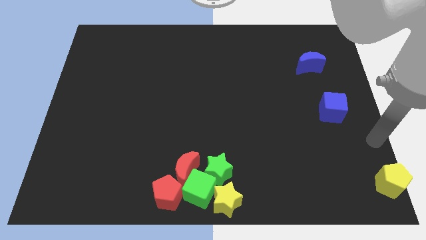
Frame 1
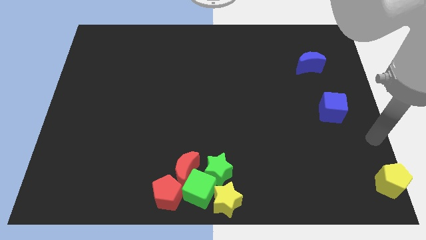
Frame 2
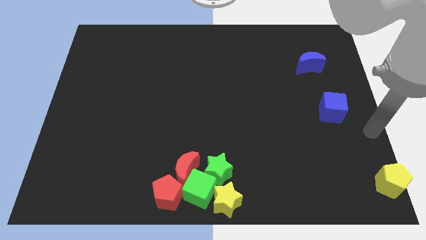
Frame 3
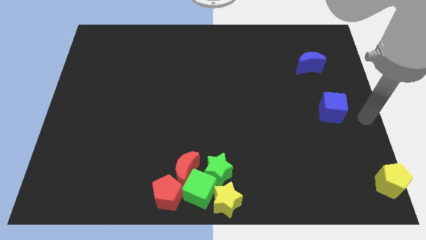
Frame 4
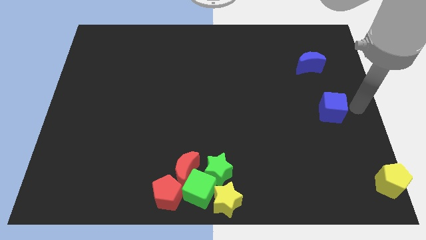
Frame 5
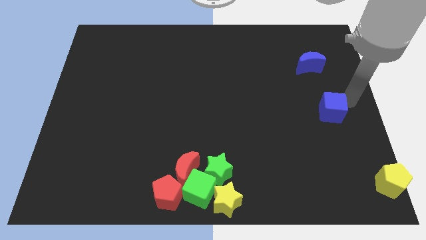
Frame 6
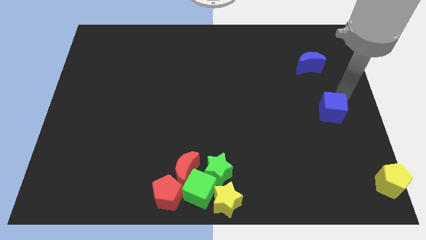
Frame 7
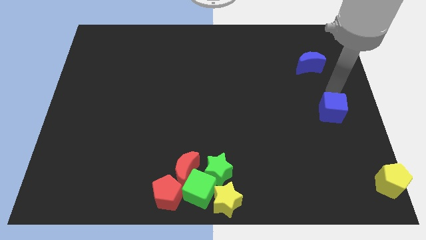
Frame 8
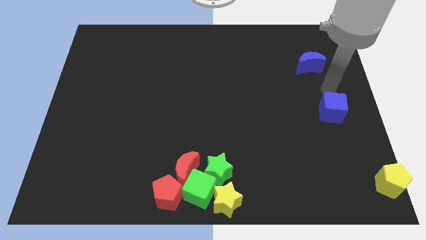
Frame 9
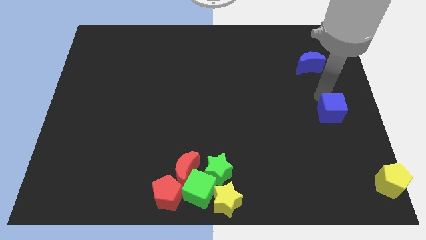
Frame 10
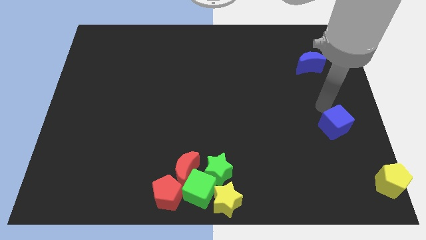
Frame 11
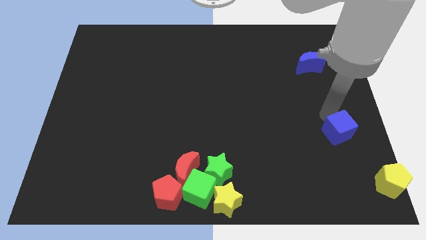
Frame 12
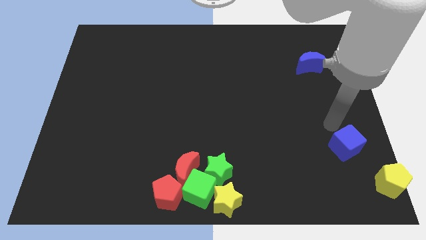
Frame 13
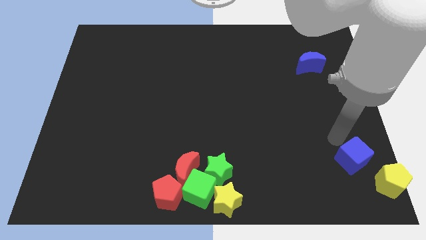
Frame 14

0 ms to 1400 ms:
move the blue cube towards the top left side of the yellow pentagon

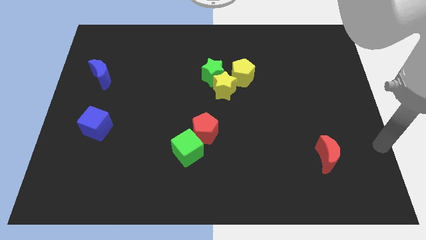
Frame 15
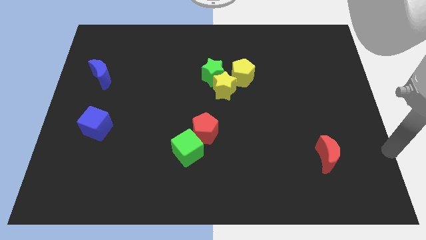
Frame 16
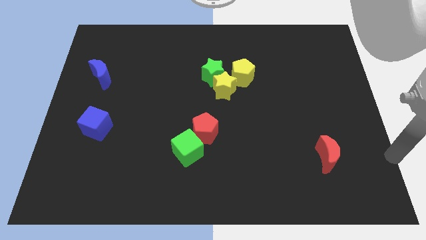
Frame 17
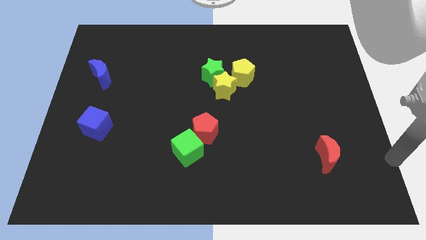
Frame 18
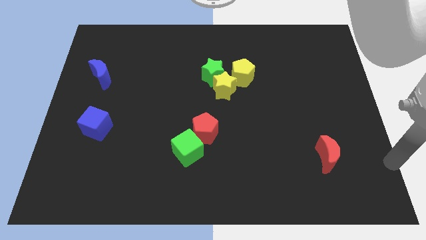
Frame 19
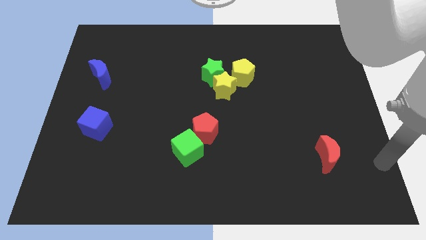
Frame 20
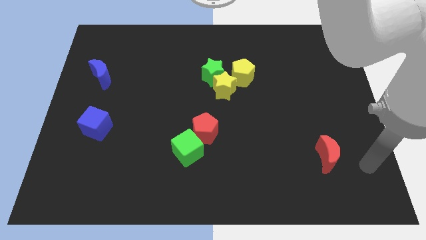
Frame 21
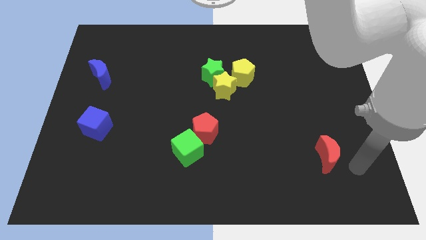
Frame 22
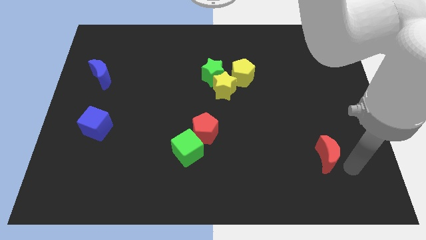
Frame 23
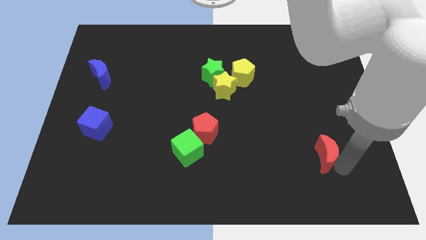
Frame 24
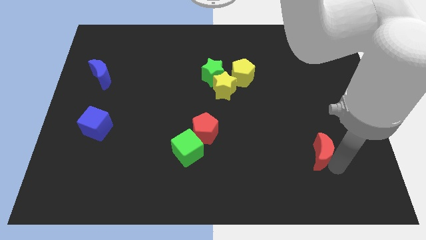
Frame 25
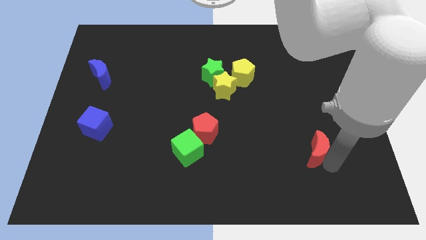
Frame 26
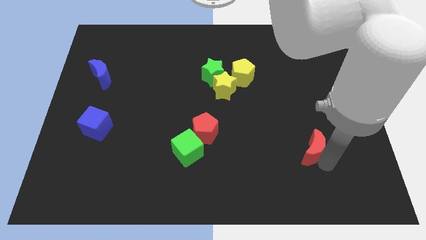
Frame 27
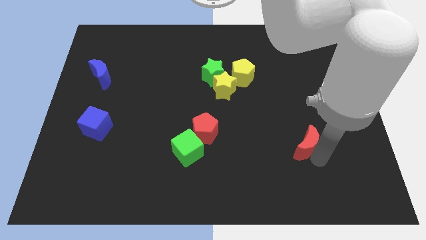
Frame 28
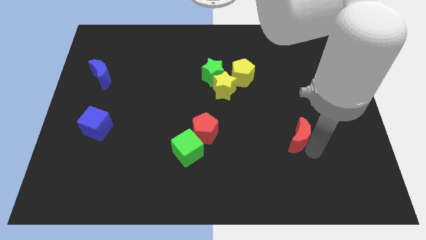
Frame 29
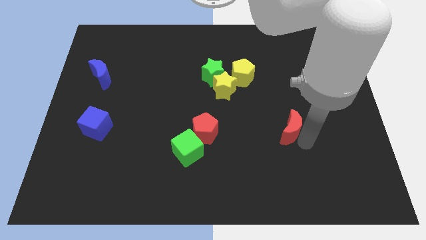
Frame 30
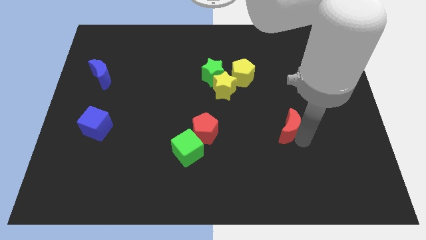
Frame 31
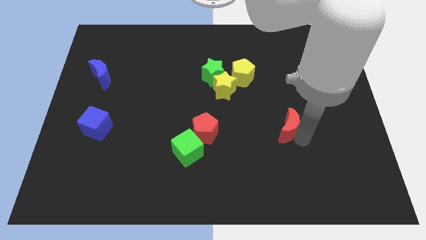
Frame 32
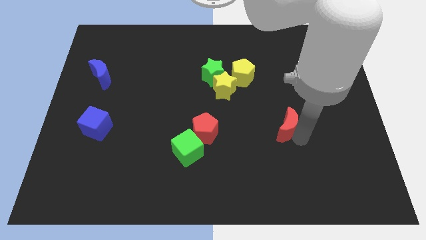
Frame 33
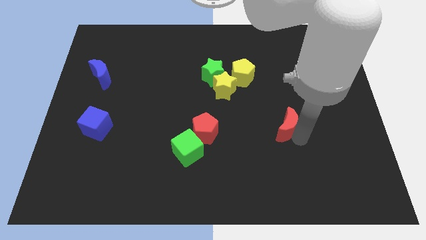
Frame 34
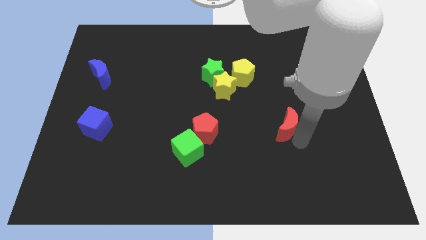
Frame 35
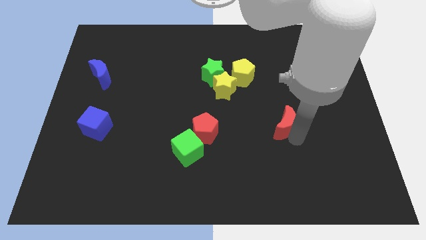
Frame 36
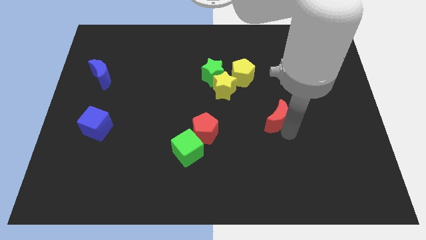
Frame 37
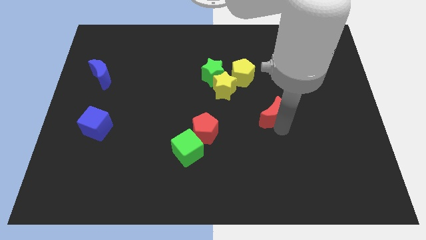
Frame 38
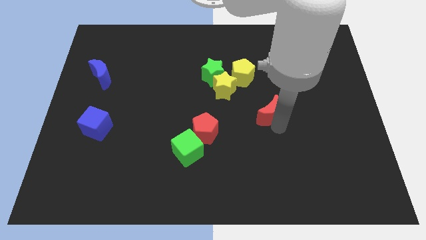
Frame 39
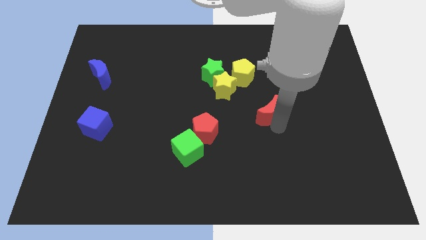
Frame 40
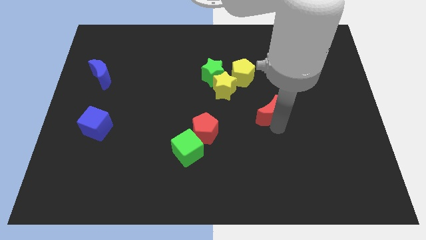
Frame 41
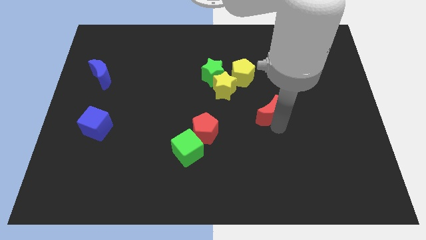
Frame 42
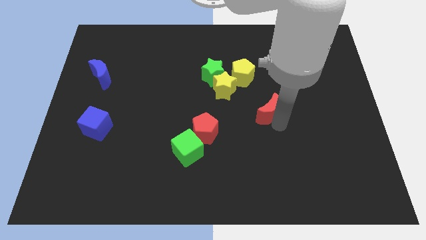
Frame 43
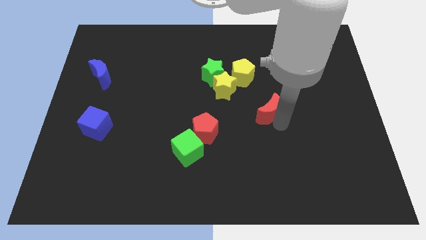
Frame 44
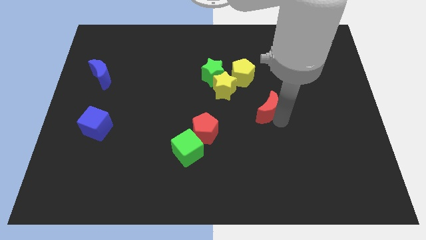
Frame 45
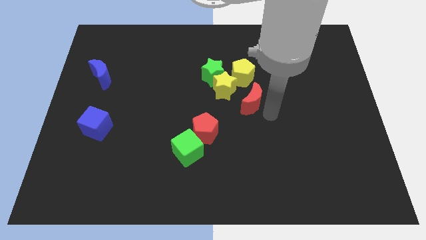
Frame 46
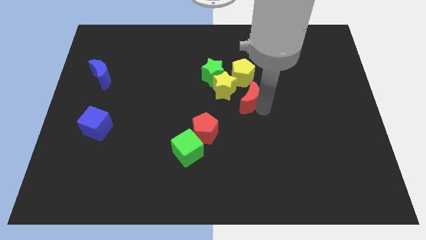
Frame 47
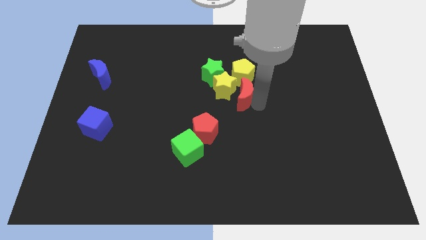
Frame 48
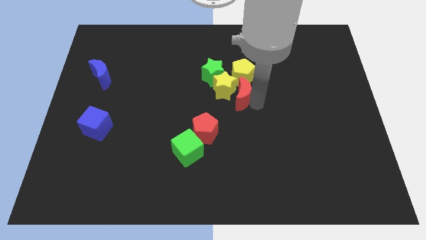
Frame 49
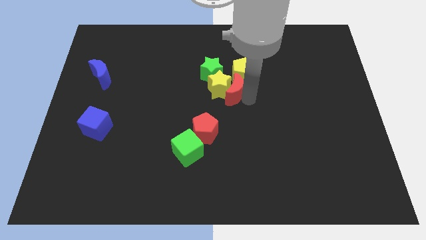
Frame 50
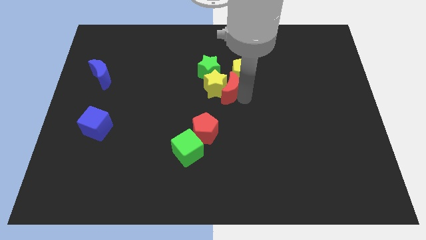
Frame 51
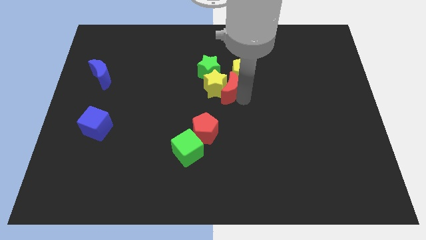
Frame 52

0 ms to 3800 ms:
move the red moon to the right of yellow star

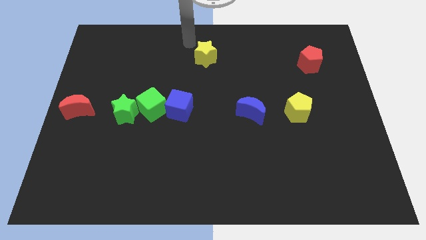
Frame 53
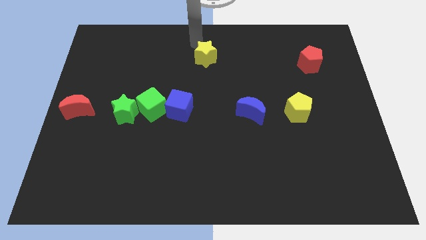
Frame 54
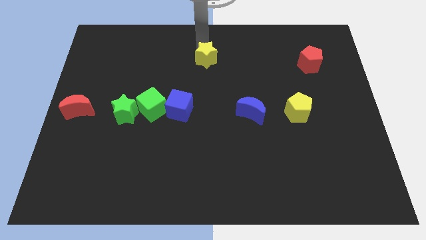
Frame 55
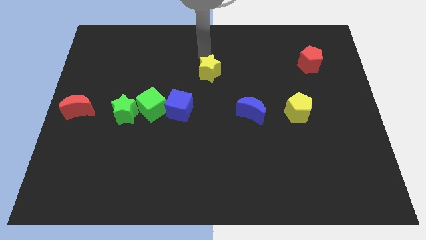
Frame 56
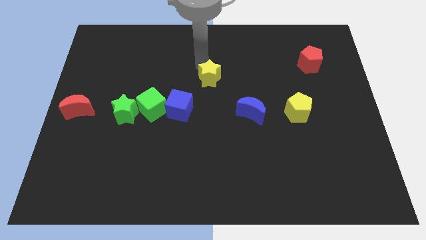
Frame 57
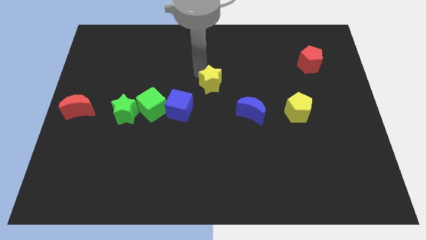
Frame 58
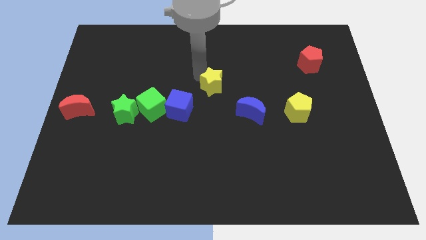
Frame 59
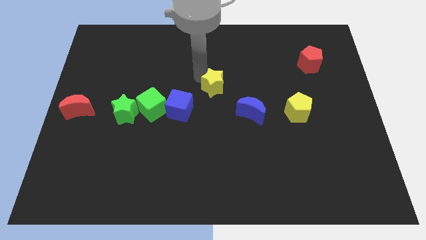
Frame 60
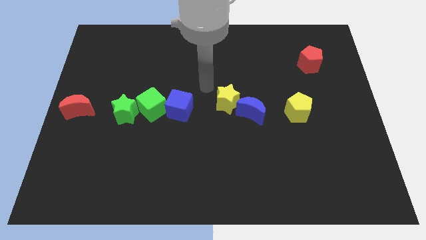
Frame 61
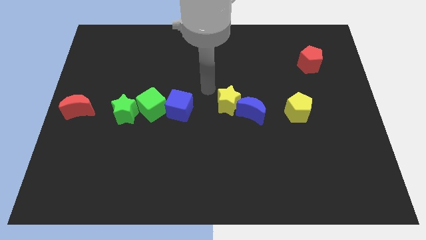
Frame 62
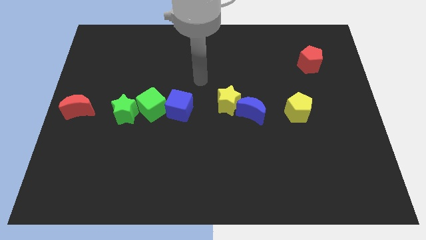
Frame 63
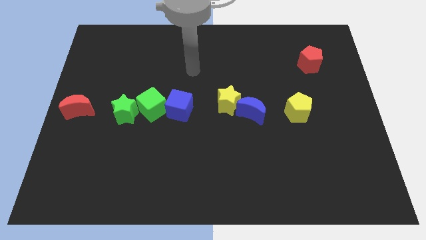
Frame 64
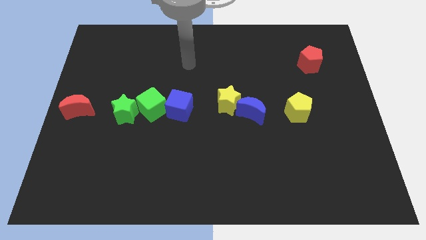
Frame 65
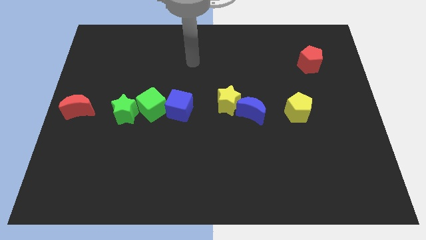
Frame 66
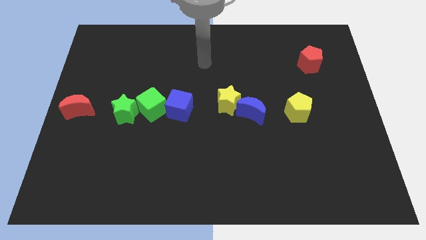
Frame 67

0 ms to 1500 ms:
place yellow star to the left of blue moon

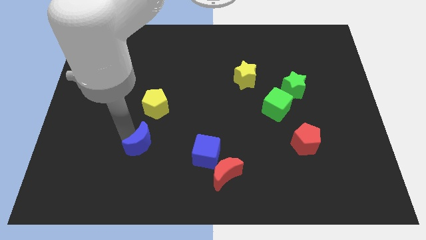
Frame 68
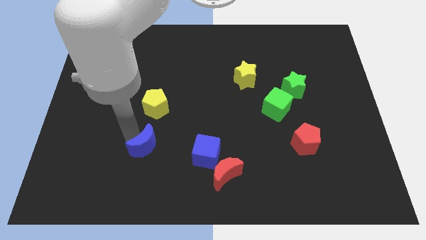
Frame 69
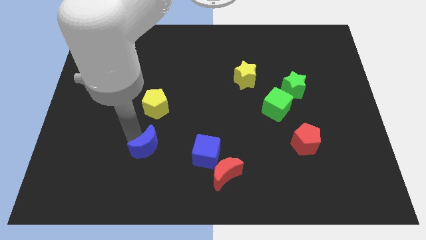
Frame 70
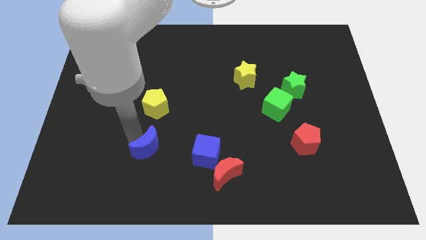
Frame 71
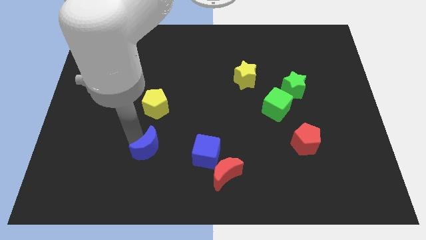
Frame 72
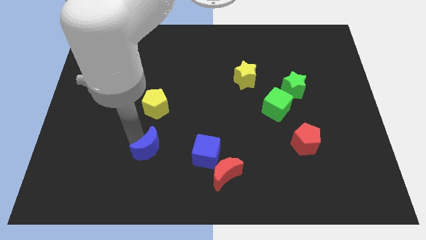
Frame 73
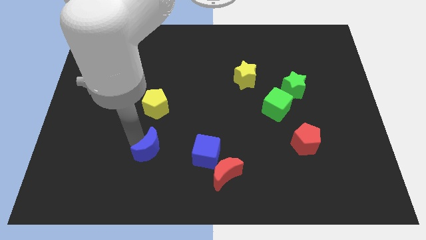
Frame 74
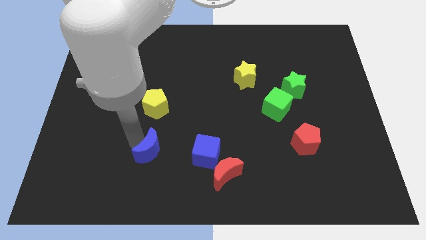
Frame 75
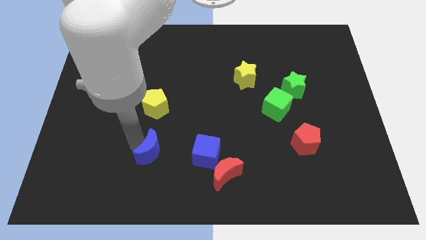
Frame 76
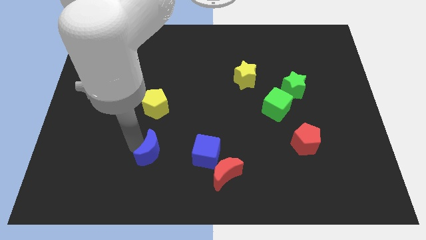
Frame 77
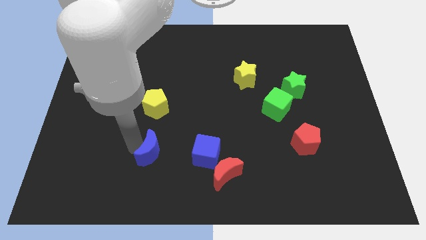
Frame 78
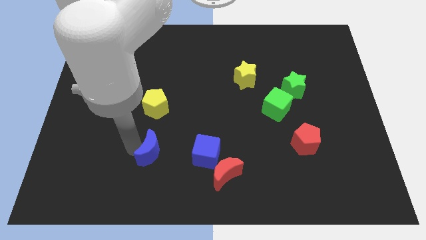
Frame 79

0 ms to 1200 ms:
place blue moon vertically below yellow pentagon

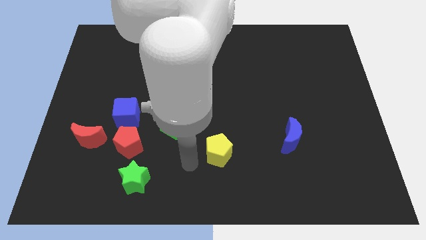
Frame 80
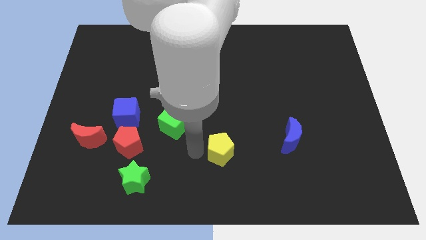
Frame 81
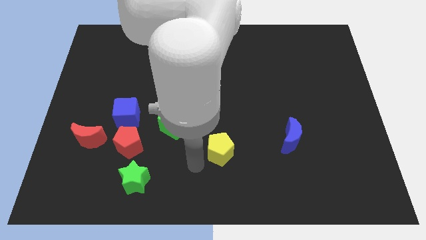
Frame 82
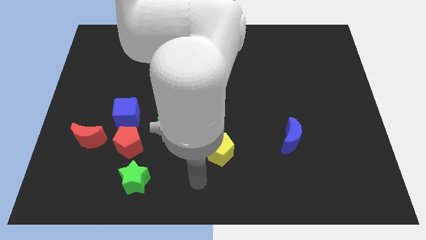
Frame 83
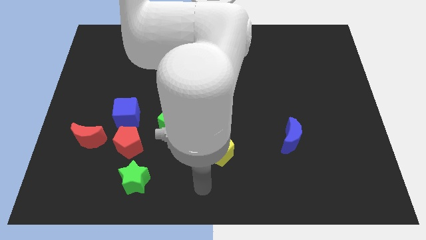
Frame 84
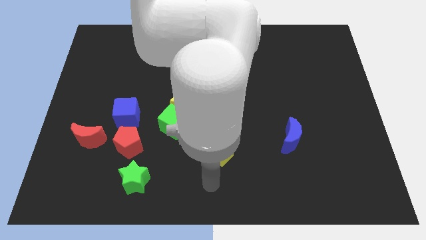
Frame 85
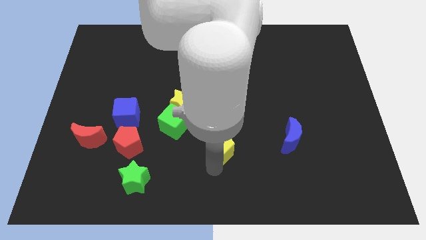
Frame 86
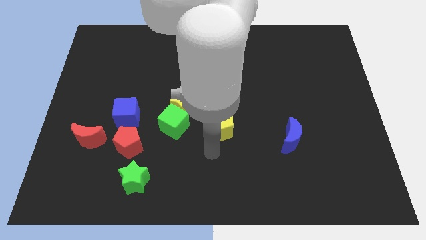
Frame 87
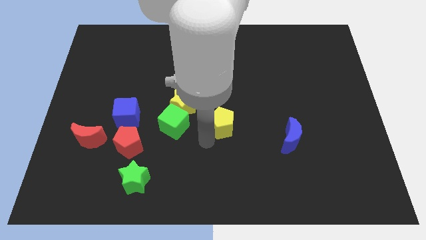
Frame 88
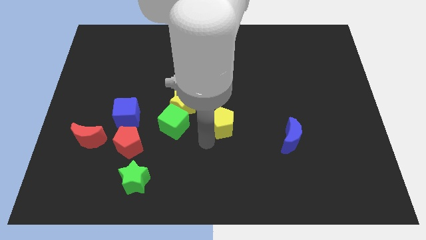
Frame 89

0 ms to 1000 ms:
place the yellow pentagon in between the green cube and blue moon

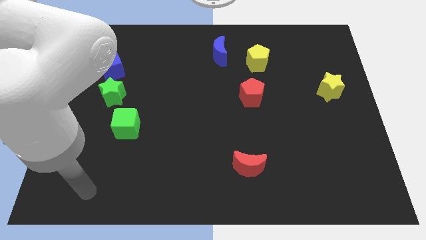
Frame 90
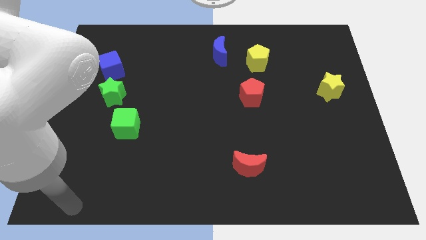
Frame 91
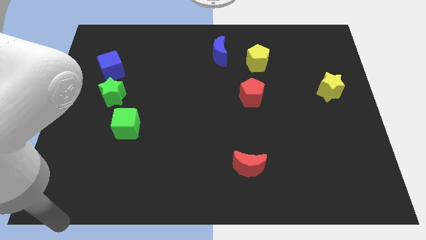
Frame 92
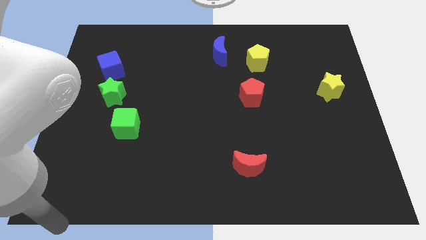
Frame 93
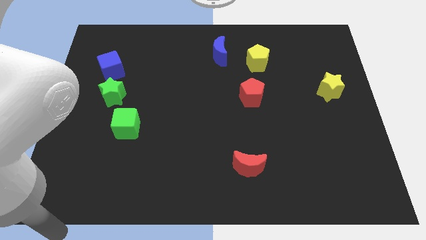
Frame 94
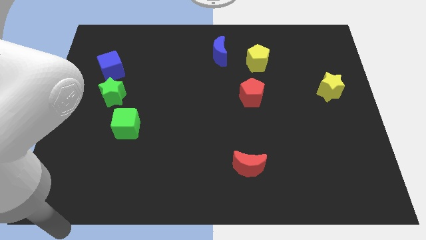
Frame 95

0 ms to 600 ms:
place arm on bottom left corner
